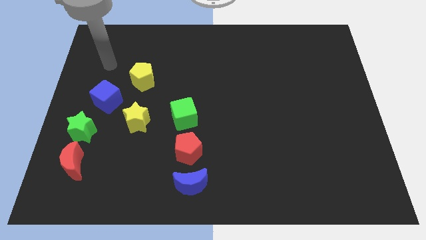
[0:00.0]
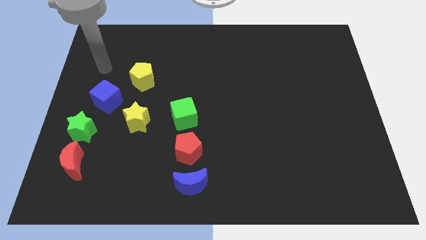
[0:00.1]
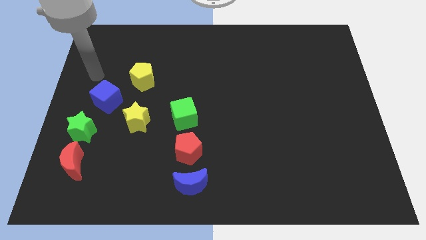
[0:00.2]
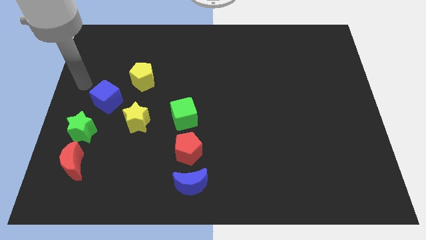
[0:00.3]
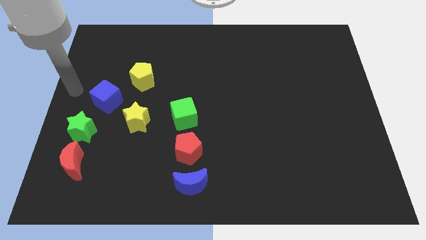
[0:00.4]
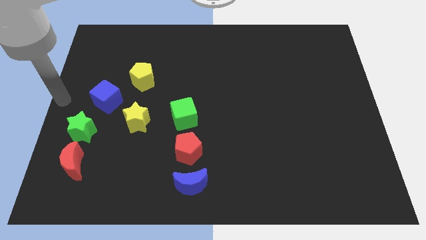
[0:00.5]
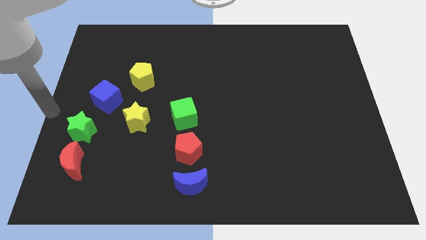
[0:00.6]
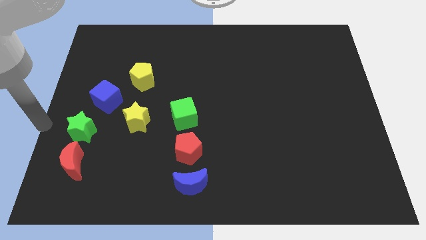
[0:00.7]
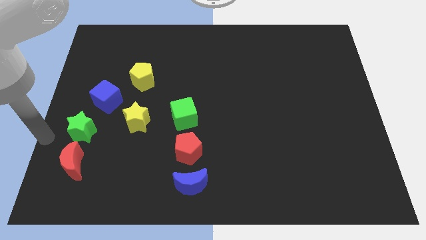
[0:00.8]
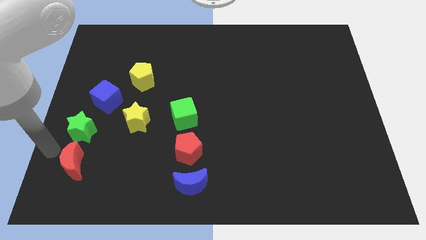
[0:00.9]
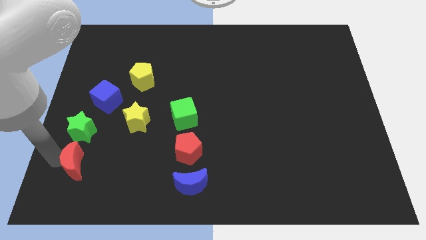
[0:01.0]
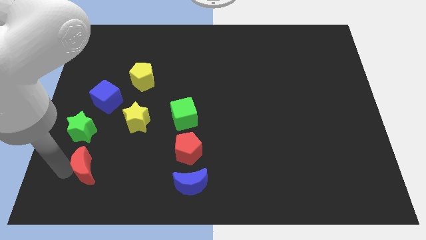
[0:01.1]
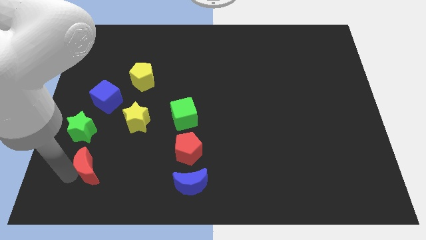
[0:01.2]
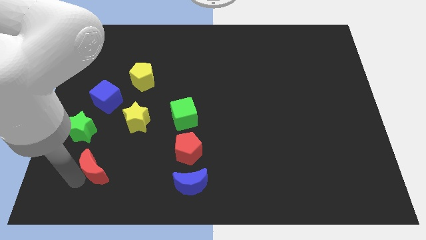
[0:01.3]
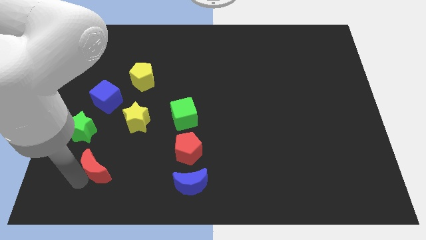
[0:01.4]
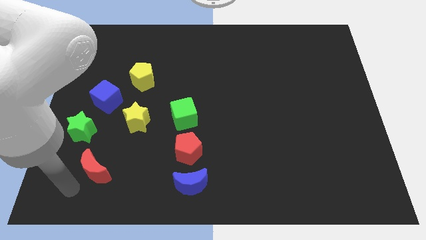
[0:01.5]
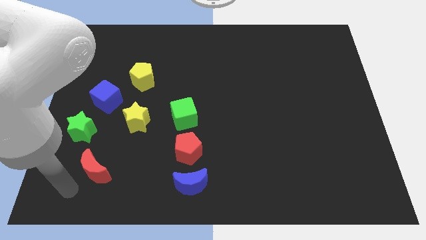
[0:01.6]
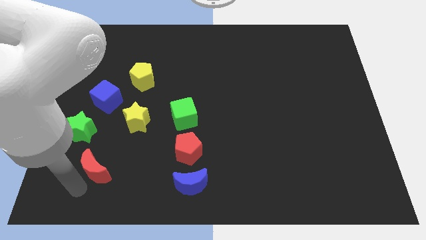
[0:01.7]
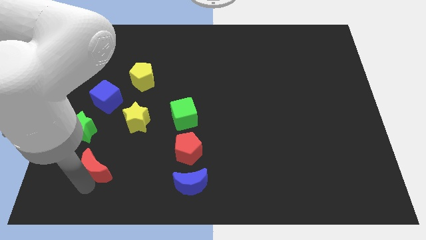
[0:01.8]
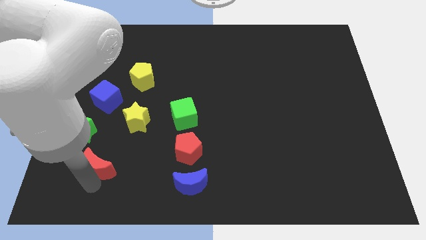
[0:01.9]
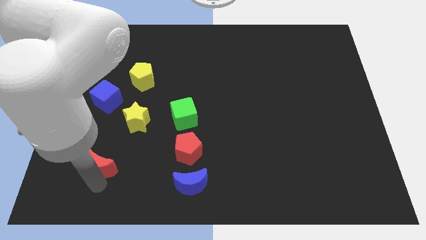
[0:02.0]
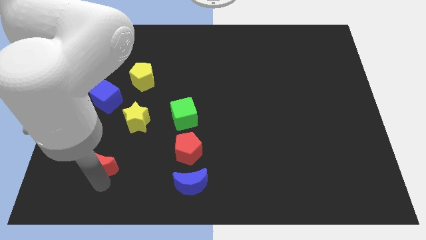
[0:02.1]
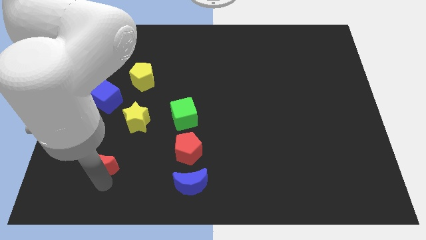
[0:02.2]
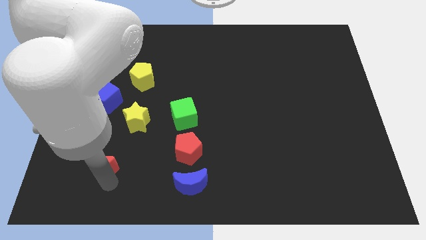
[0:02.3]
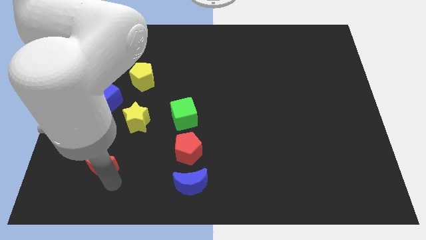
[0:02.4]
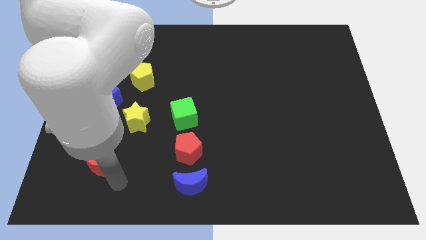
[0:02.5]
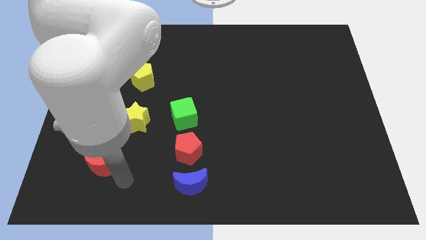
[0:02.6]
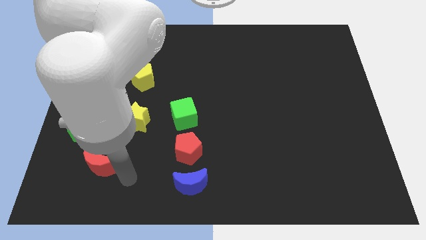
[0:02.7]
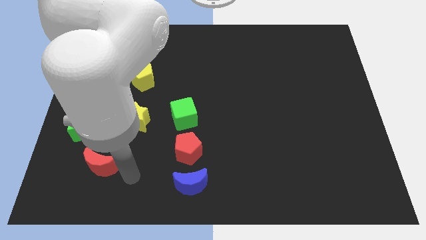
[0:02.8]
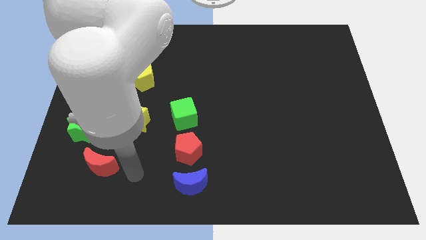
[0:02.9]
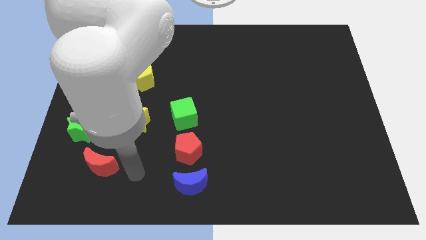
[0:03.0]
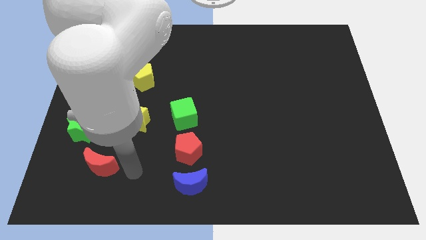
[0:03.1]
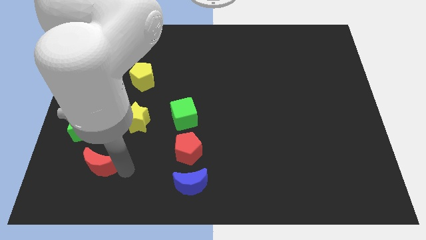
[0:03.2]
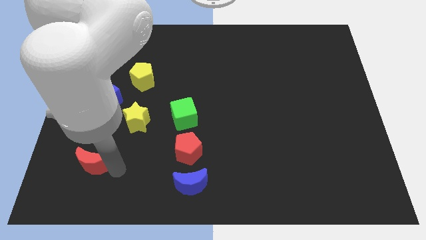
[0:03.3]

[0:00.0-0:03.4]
place the red crescent at the bottom right side of green star

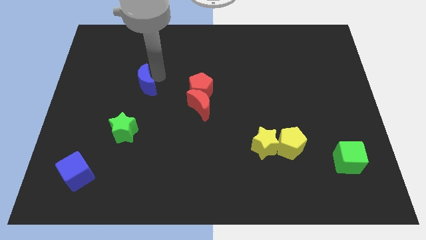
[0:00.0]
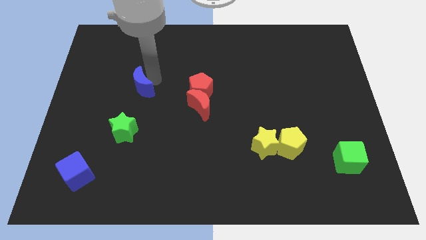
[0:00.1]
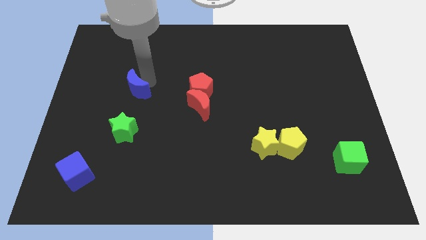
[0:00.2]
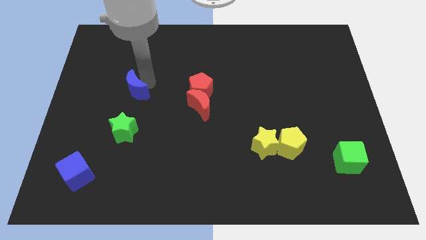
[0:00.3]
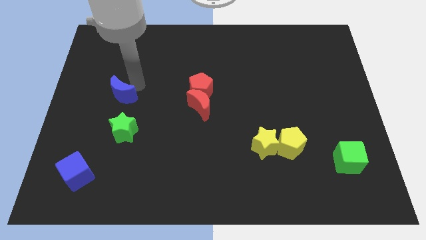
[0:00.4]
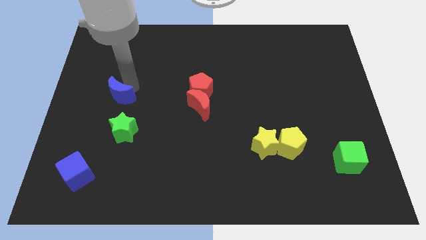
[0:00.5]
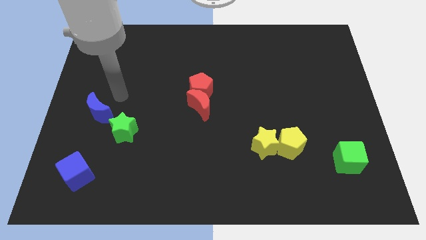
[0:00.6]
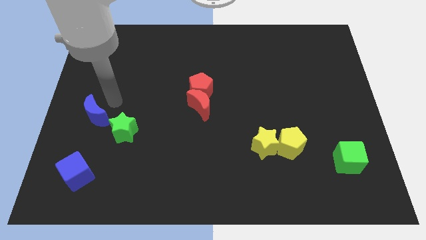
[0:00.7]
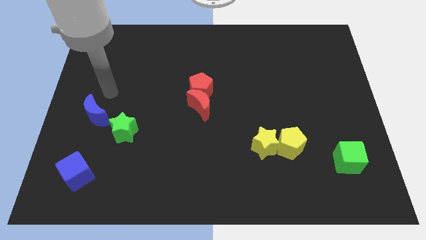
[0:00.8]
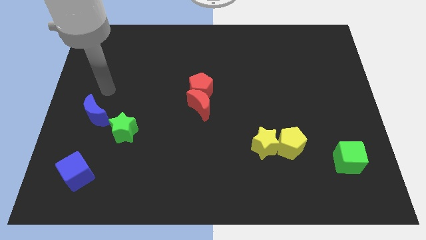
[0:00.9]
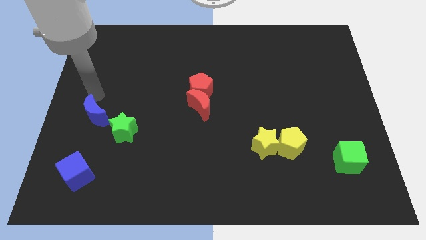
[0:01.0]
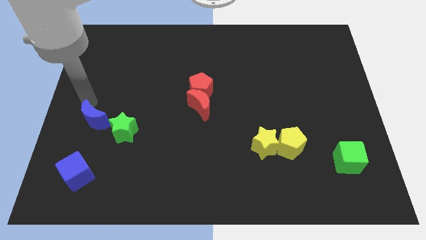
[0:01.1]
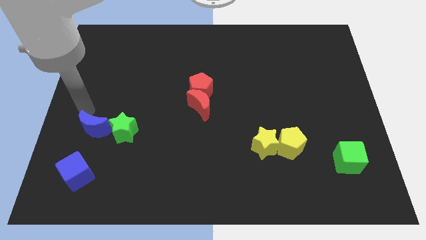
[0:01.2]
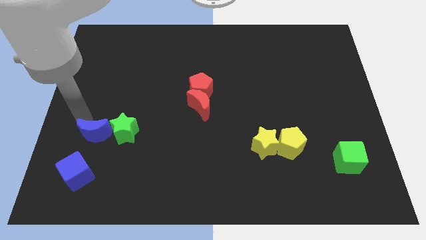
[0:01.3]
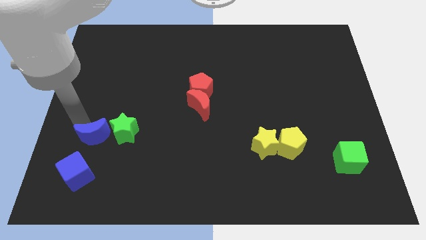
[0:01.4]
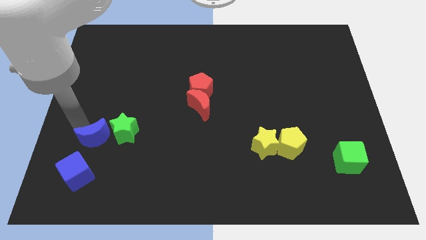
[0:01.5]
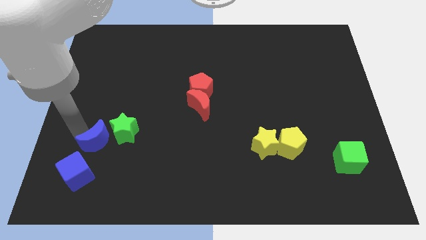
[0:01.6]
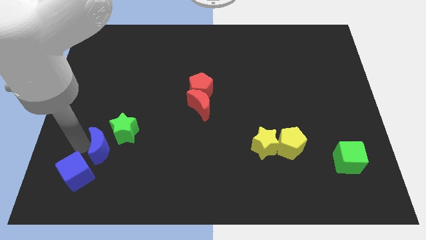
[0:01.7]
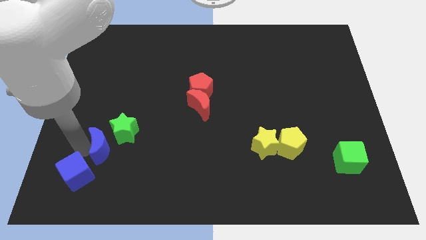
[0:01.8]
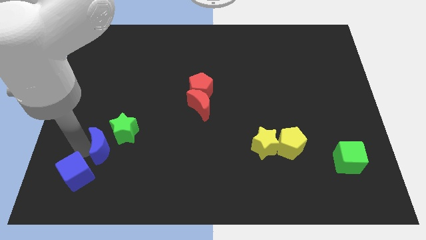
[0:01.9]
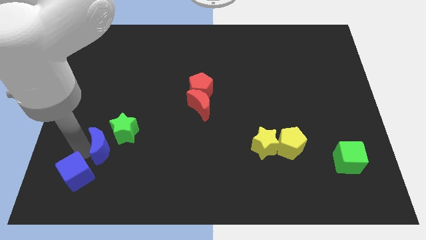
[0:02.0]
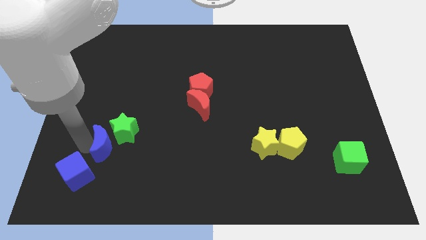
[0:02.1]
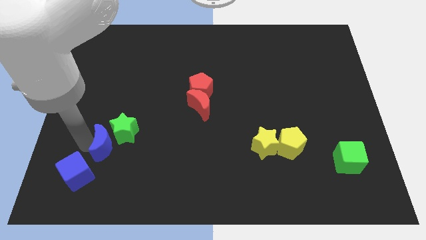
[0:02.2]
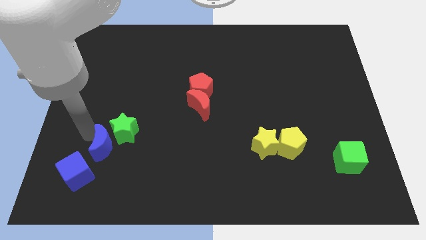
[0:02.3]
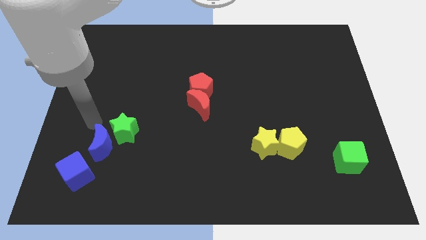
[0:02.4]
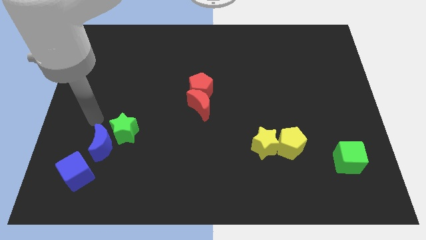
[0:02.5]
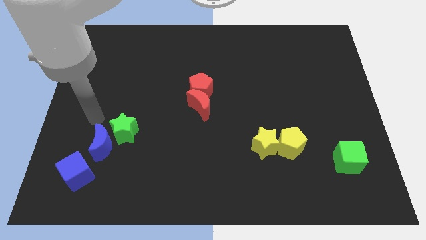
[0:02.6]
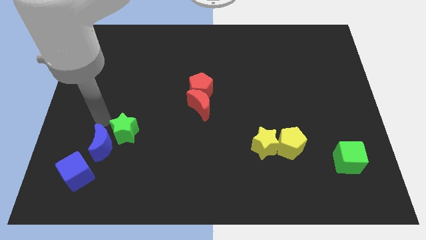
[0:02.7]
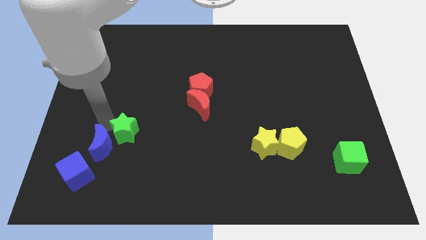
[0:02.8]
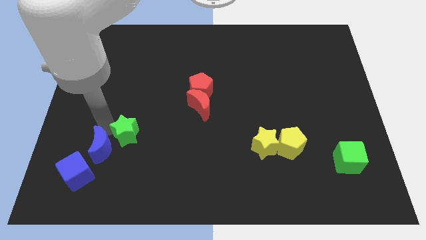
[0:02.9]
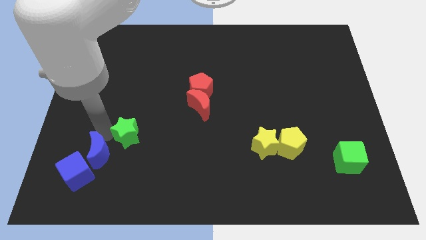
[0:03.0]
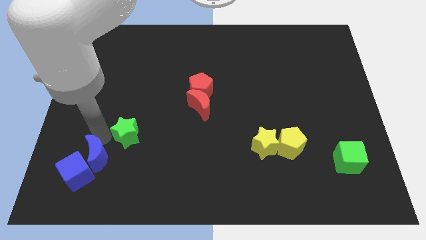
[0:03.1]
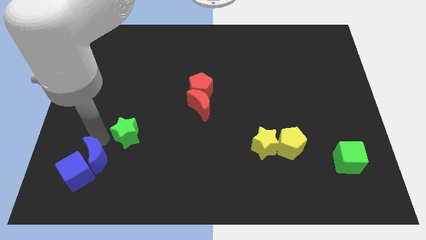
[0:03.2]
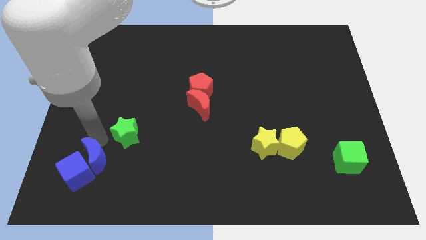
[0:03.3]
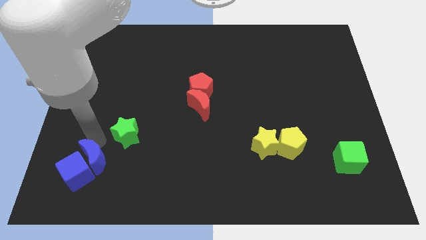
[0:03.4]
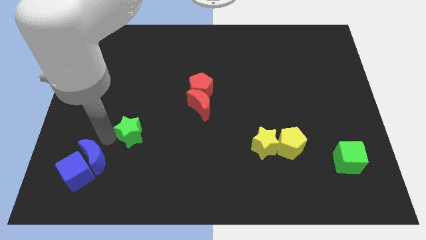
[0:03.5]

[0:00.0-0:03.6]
move blue moon into blue cube

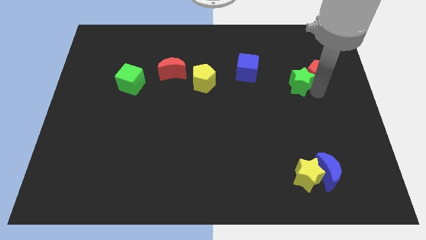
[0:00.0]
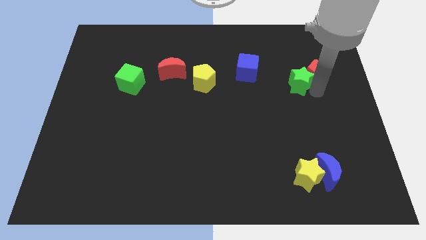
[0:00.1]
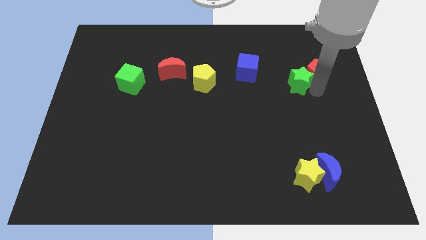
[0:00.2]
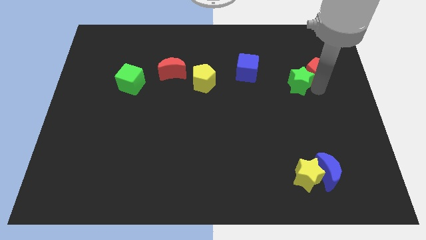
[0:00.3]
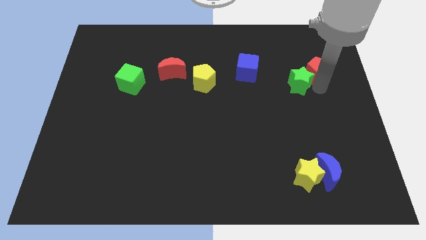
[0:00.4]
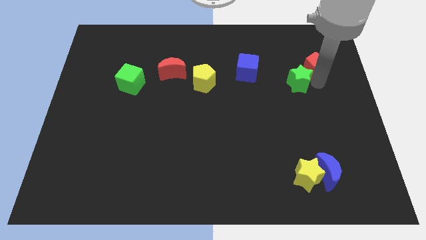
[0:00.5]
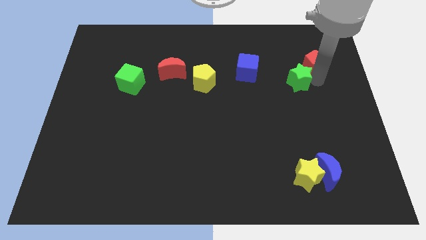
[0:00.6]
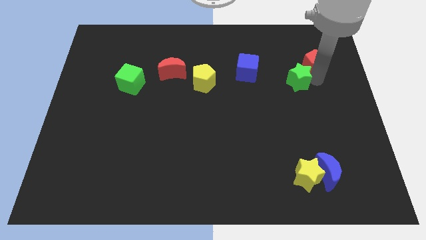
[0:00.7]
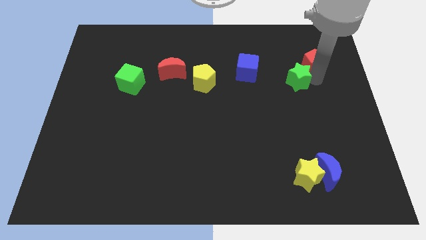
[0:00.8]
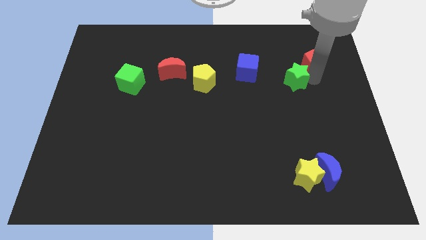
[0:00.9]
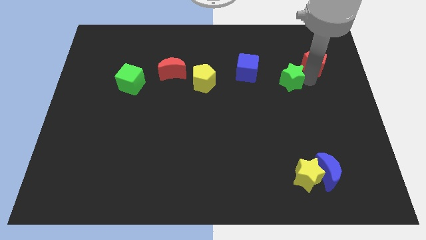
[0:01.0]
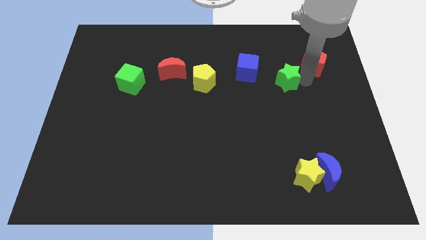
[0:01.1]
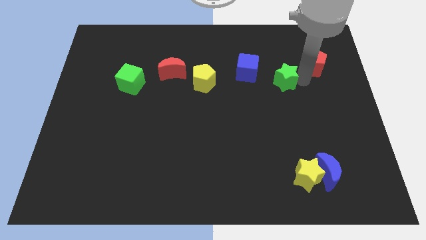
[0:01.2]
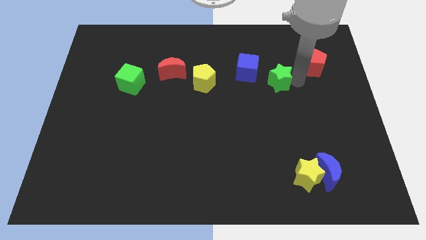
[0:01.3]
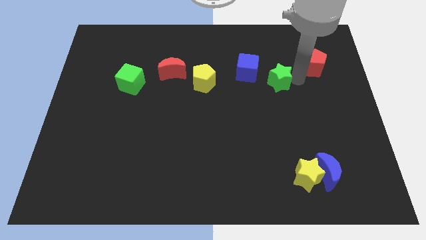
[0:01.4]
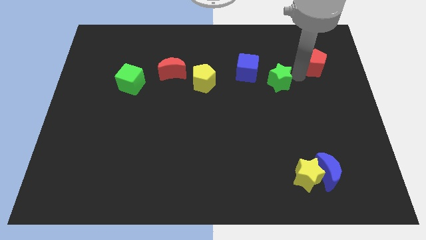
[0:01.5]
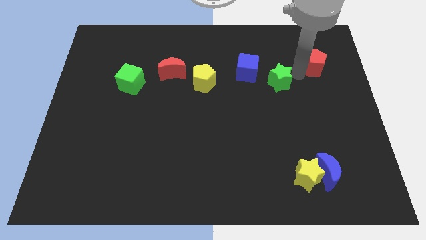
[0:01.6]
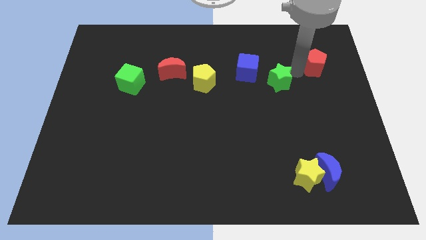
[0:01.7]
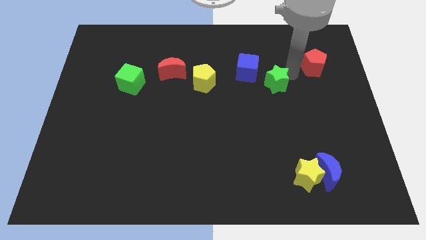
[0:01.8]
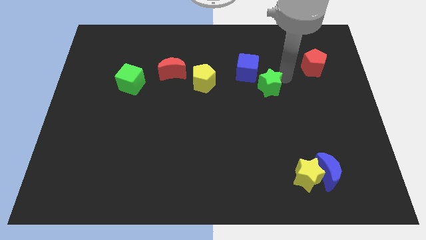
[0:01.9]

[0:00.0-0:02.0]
separate green star from the red pentagon
